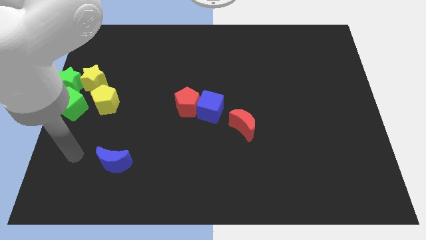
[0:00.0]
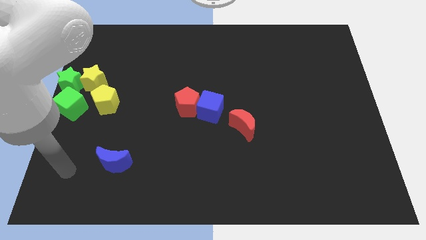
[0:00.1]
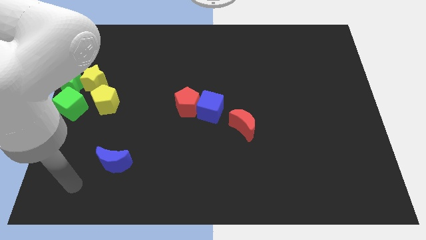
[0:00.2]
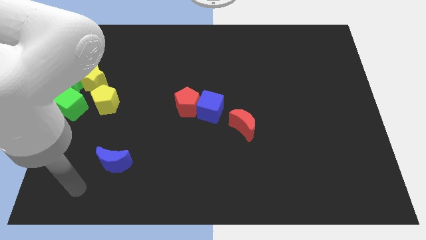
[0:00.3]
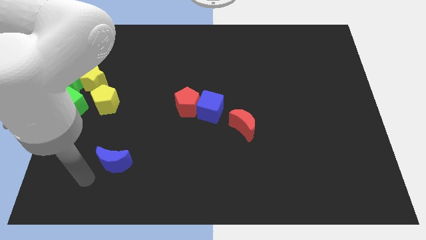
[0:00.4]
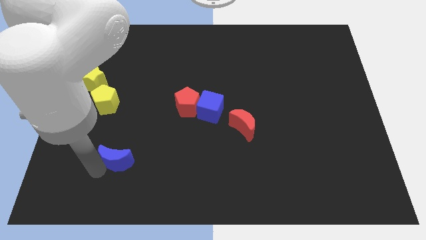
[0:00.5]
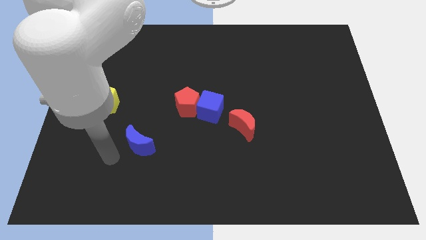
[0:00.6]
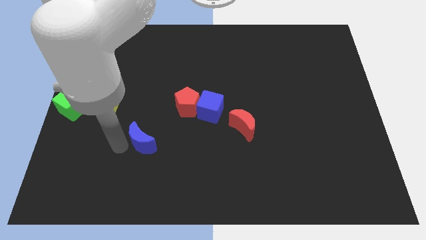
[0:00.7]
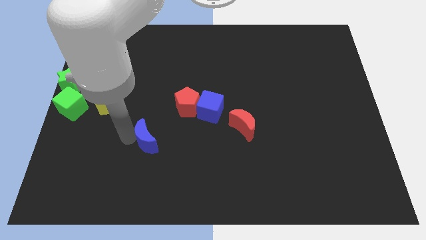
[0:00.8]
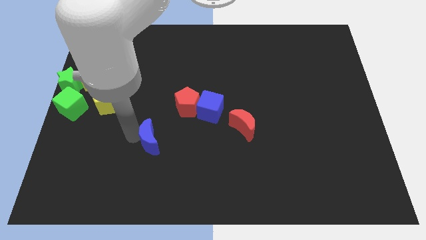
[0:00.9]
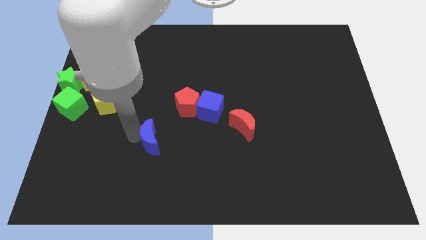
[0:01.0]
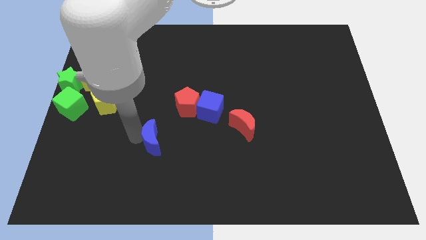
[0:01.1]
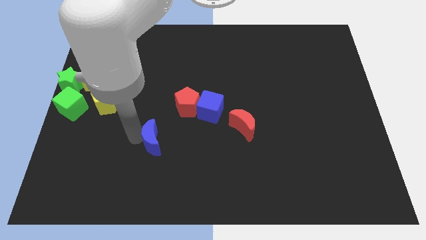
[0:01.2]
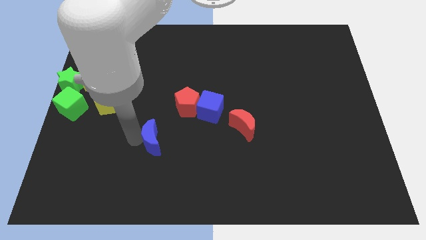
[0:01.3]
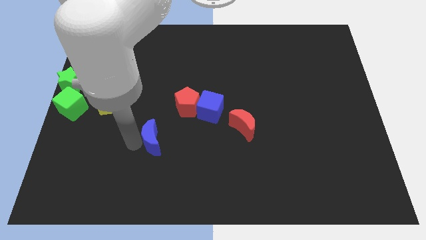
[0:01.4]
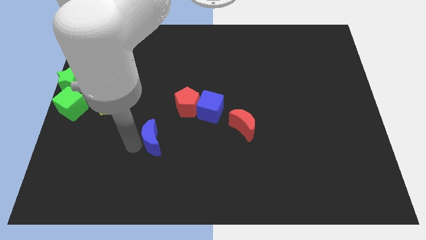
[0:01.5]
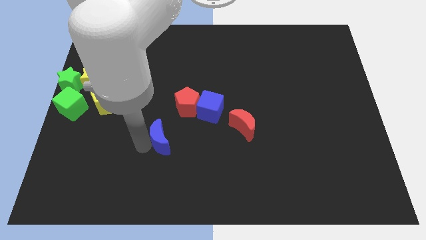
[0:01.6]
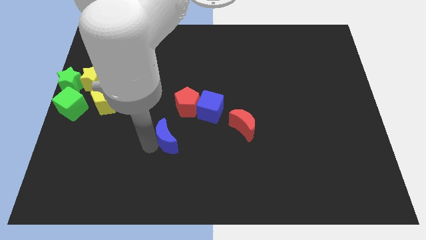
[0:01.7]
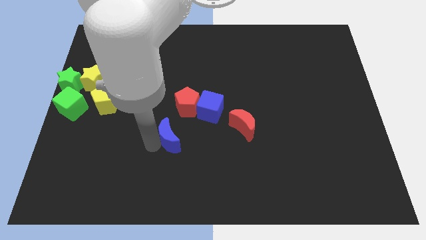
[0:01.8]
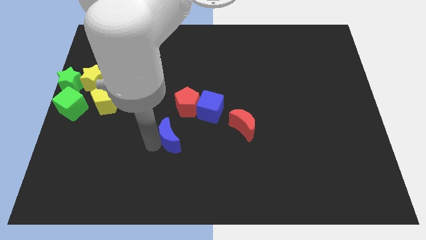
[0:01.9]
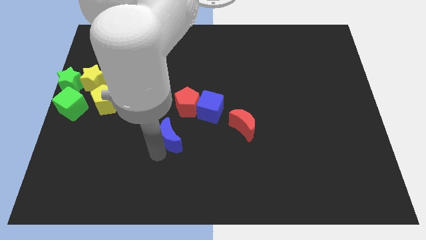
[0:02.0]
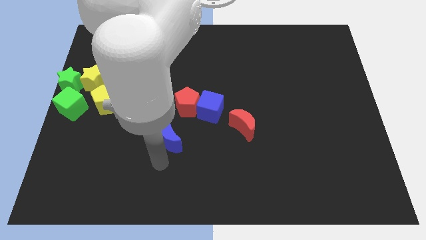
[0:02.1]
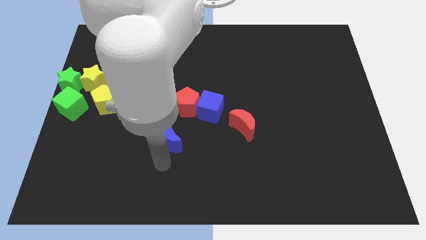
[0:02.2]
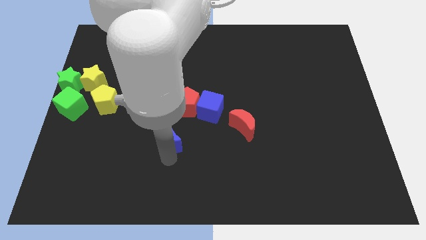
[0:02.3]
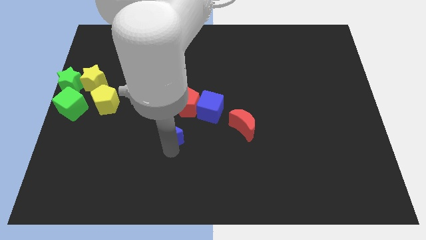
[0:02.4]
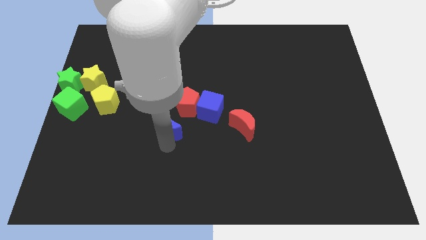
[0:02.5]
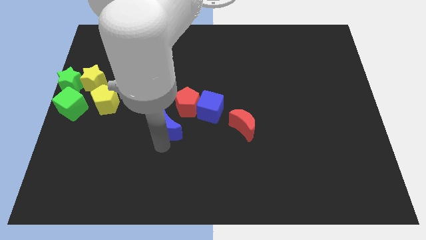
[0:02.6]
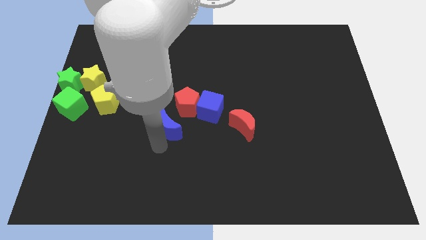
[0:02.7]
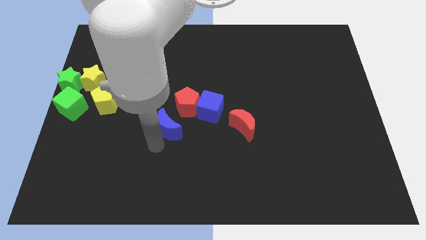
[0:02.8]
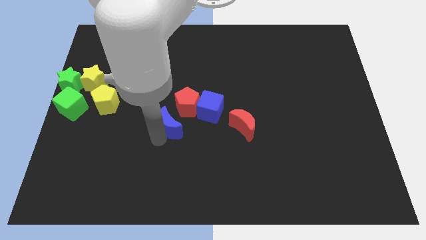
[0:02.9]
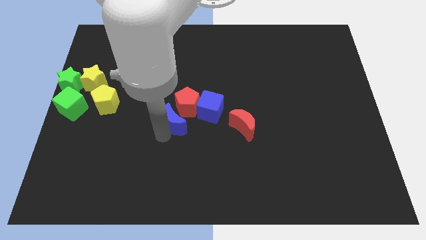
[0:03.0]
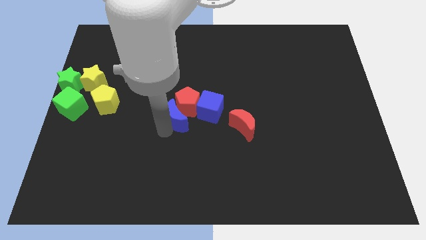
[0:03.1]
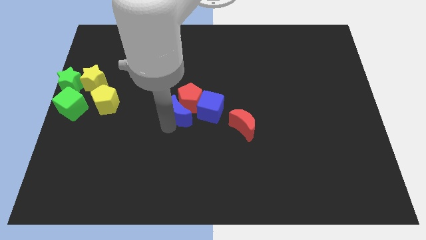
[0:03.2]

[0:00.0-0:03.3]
move the blue crescent into the red pentagon

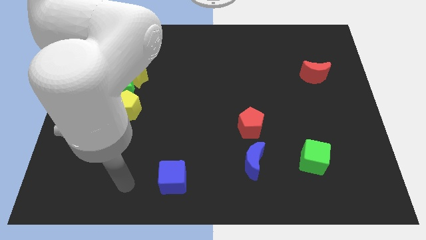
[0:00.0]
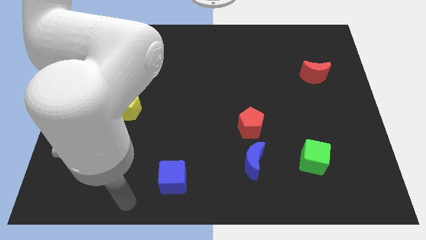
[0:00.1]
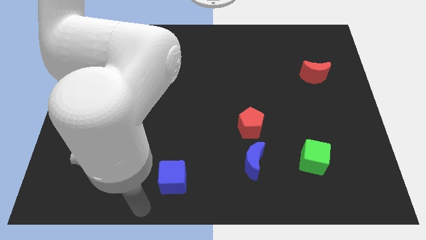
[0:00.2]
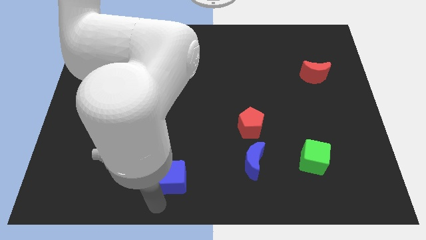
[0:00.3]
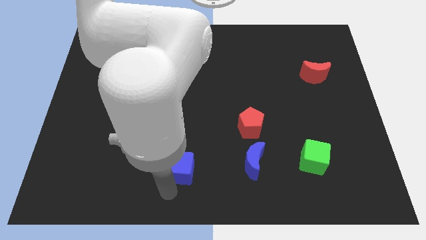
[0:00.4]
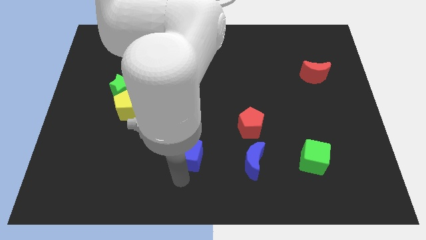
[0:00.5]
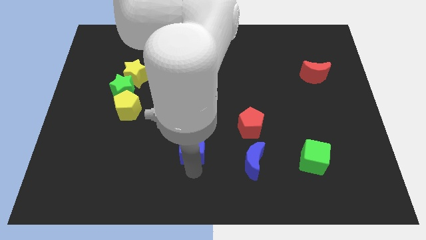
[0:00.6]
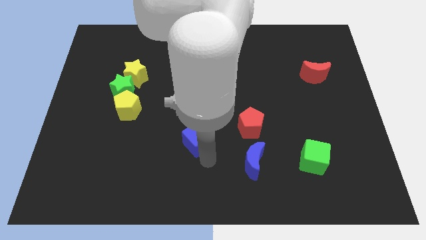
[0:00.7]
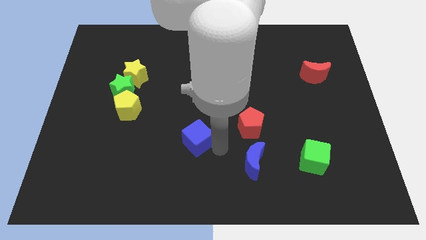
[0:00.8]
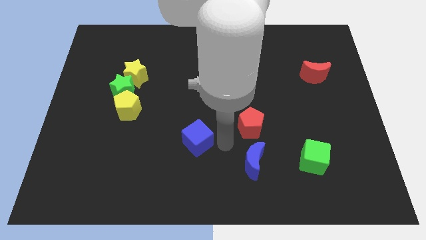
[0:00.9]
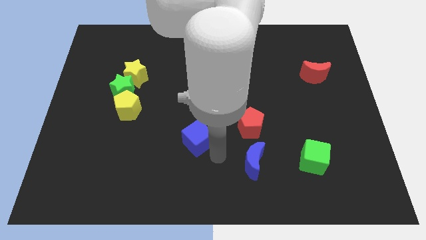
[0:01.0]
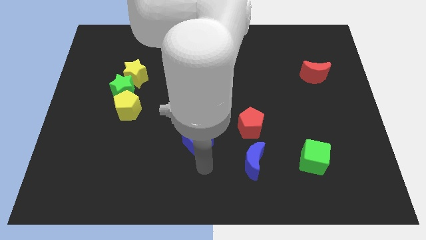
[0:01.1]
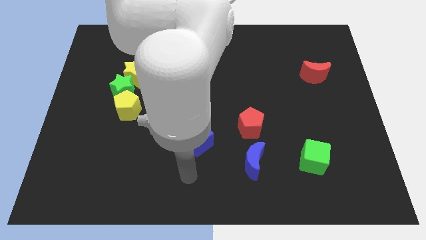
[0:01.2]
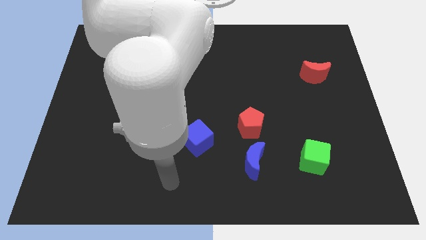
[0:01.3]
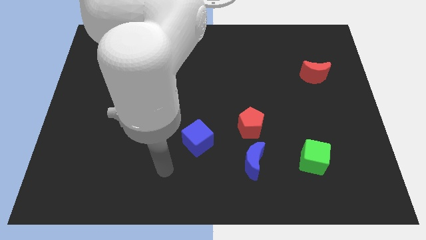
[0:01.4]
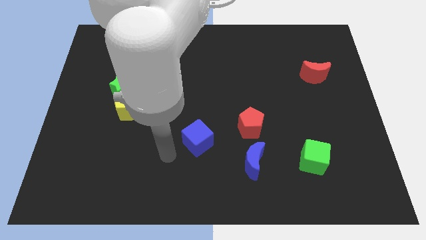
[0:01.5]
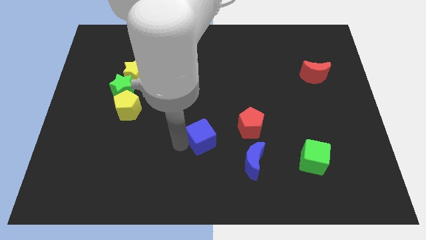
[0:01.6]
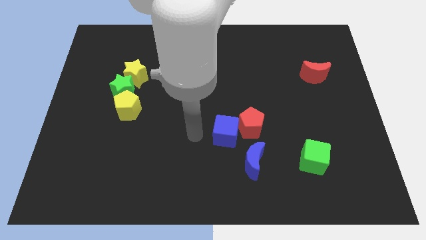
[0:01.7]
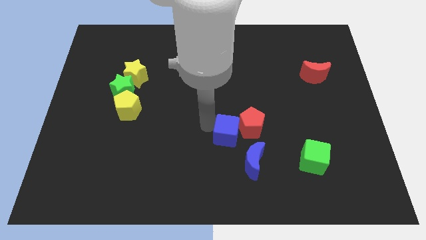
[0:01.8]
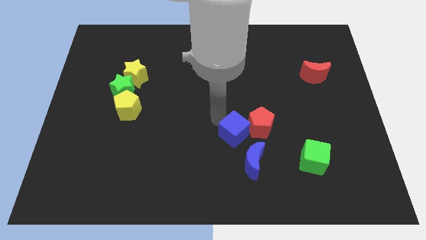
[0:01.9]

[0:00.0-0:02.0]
push the blue cube close to the red pentagon

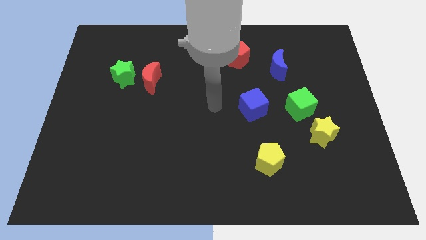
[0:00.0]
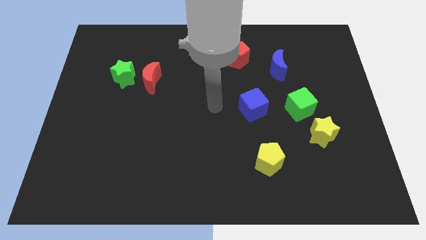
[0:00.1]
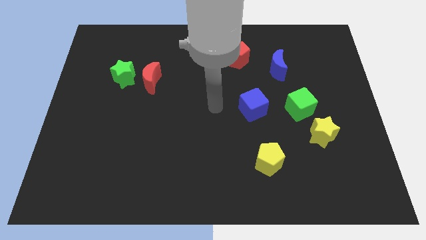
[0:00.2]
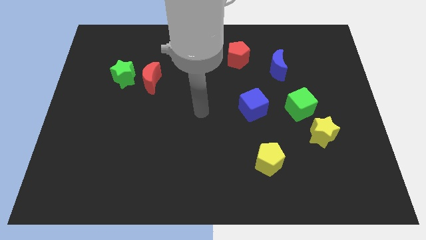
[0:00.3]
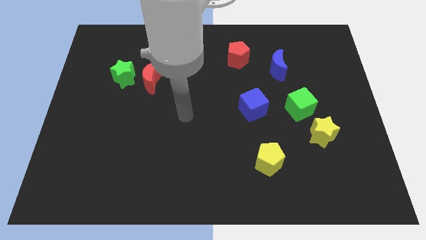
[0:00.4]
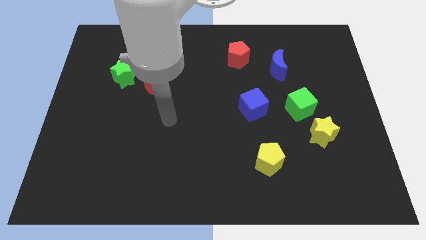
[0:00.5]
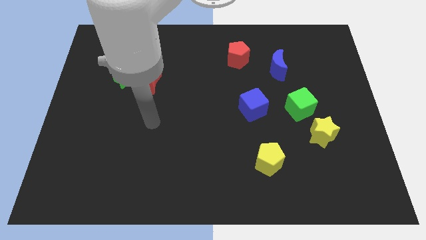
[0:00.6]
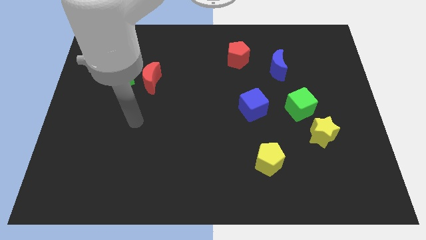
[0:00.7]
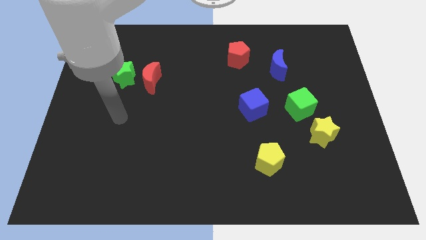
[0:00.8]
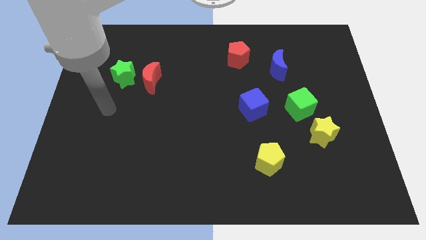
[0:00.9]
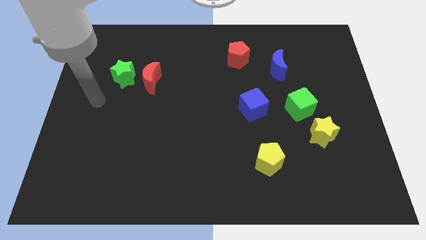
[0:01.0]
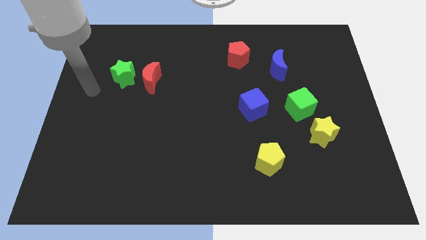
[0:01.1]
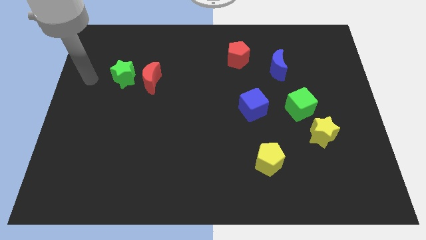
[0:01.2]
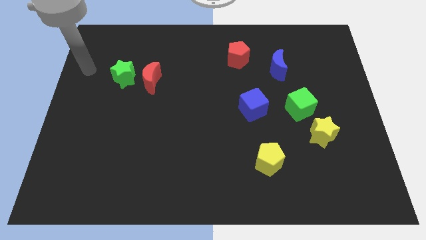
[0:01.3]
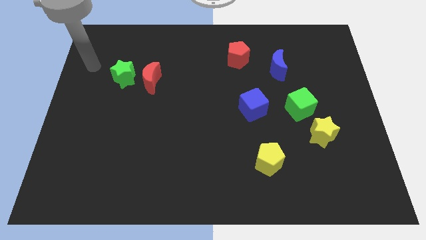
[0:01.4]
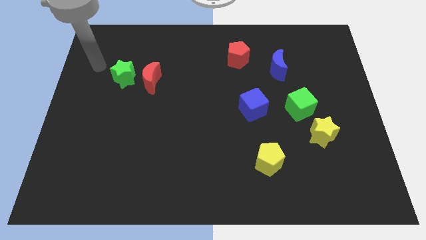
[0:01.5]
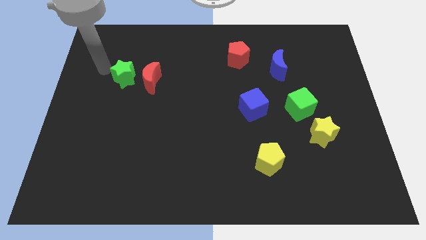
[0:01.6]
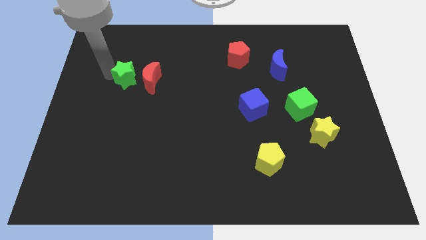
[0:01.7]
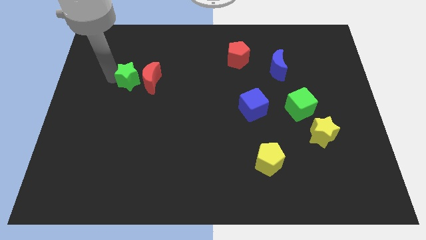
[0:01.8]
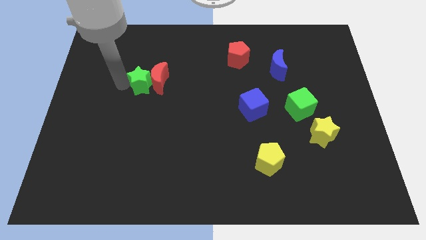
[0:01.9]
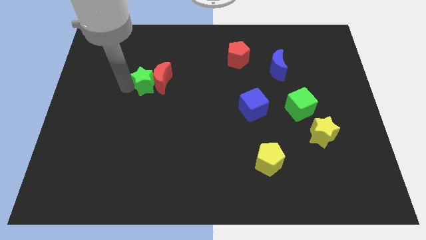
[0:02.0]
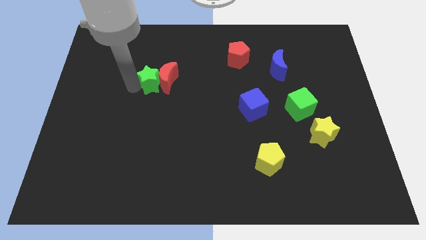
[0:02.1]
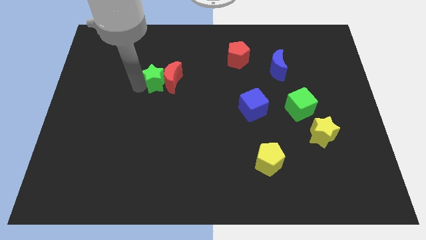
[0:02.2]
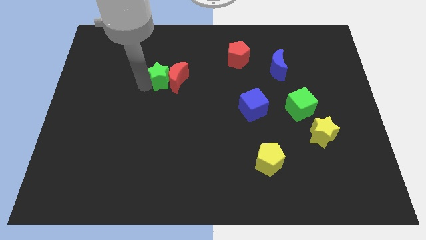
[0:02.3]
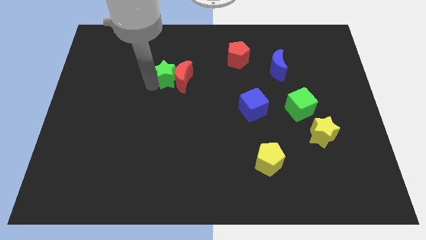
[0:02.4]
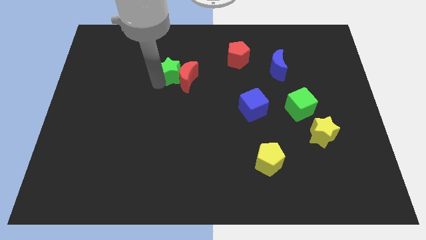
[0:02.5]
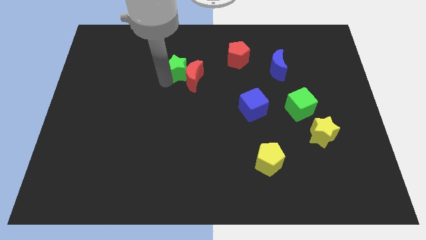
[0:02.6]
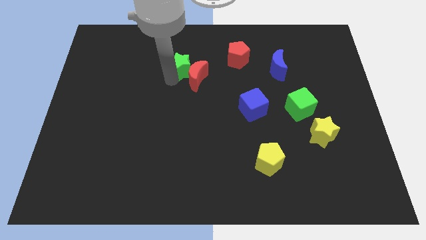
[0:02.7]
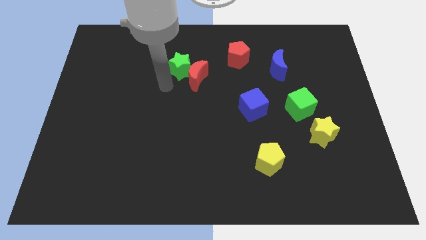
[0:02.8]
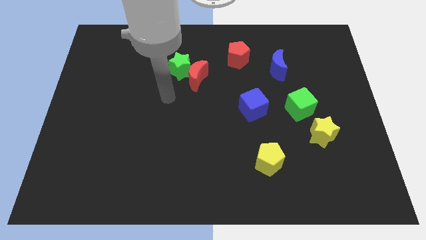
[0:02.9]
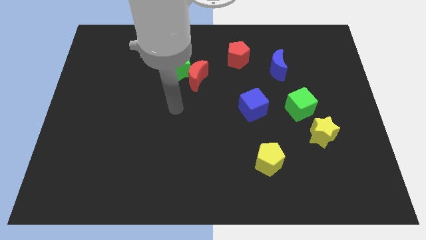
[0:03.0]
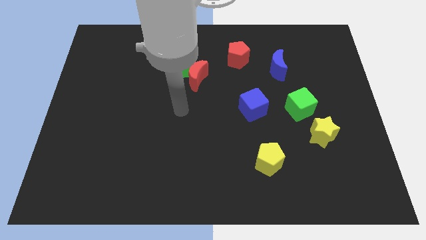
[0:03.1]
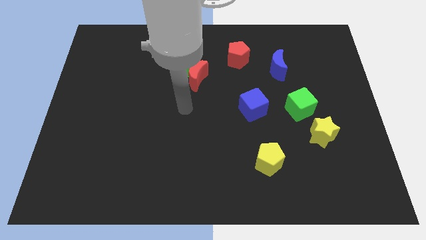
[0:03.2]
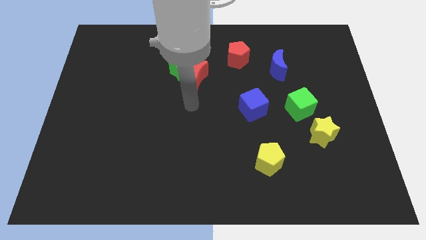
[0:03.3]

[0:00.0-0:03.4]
push the green star and the red moon slightly to the right

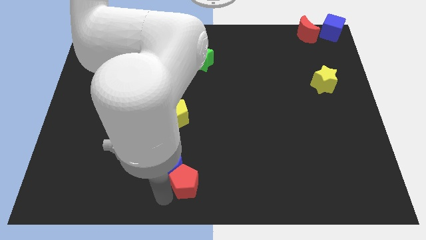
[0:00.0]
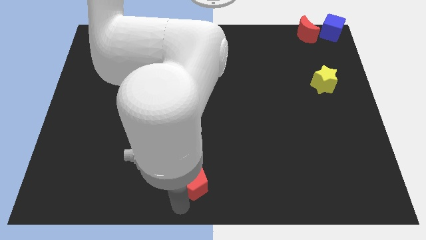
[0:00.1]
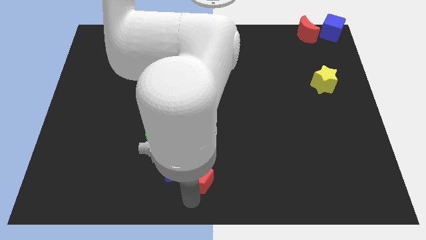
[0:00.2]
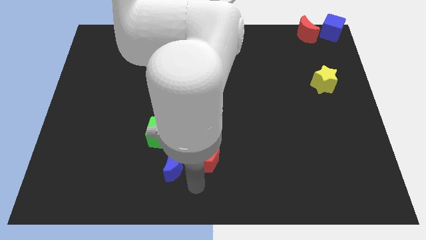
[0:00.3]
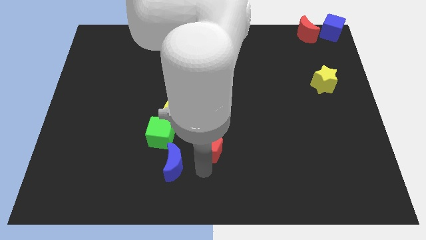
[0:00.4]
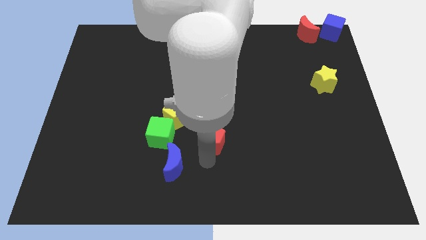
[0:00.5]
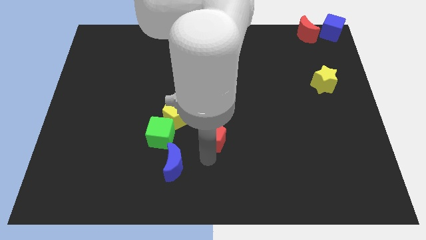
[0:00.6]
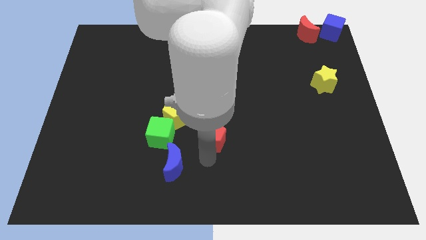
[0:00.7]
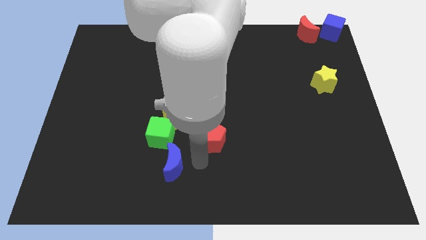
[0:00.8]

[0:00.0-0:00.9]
push the red pentagon right to the green cube
